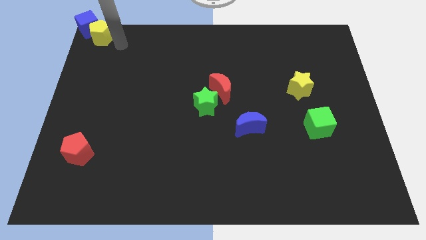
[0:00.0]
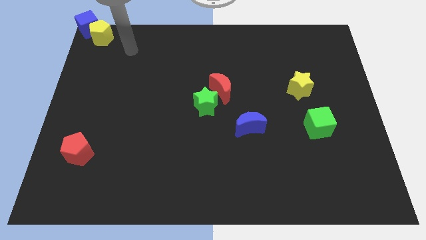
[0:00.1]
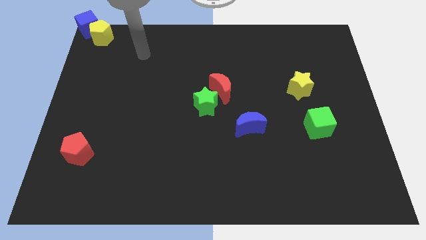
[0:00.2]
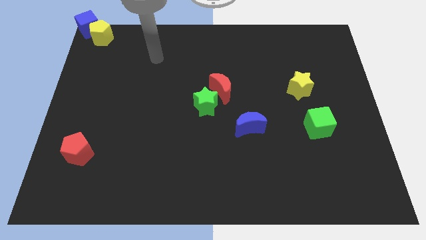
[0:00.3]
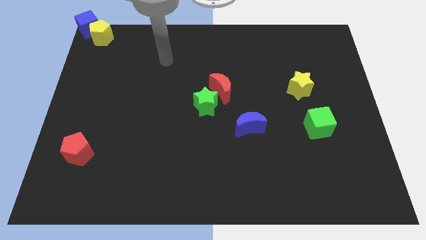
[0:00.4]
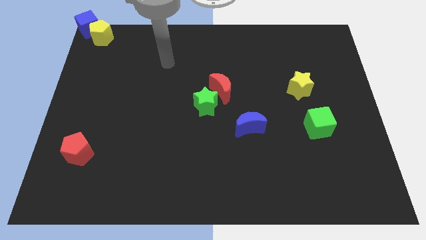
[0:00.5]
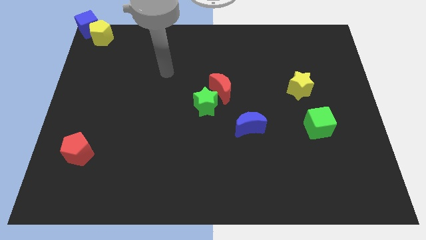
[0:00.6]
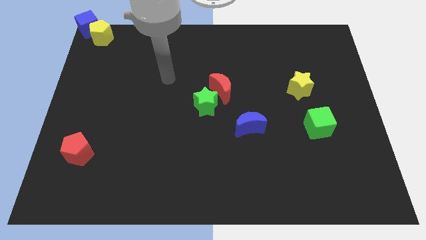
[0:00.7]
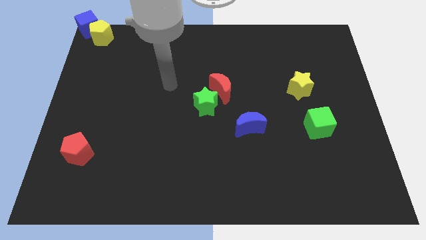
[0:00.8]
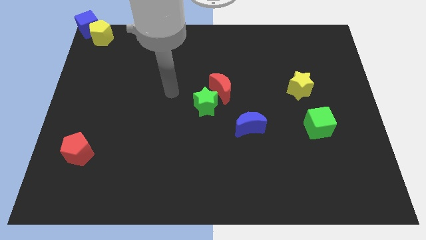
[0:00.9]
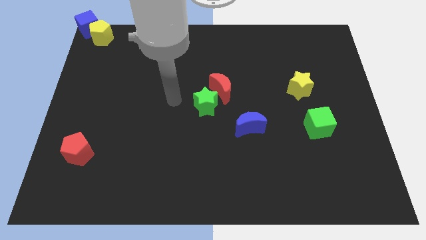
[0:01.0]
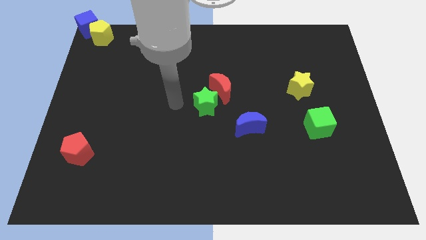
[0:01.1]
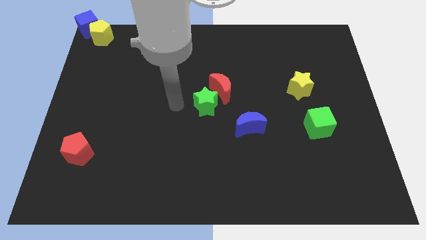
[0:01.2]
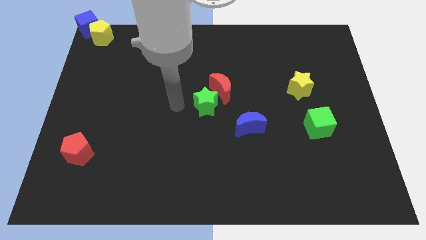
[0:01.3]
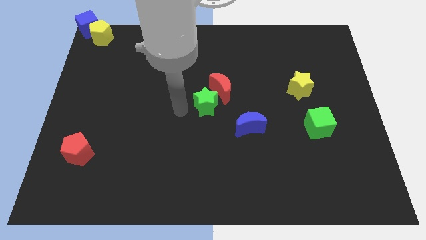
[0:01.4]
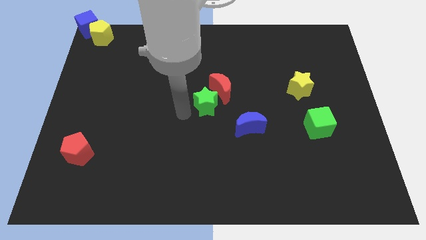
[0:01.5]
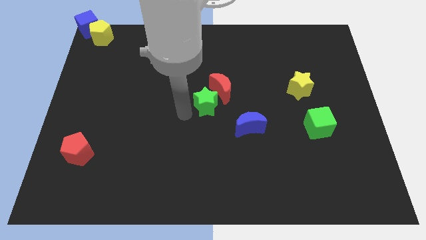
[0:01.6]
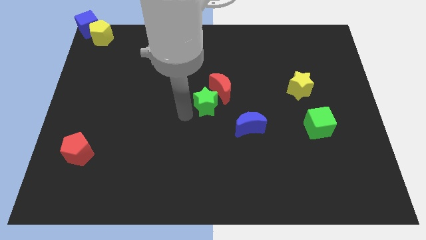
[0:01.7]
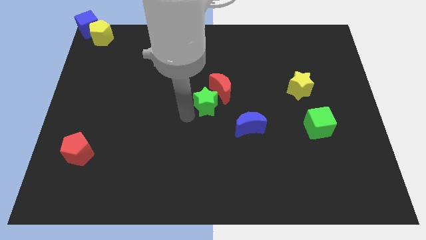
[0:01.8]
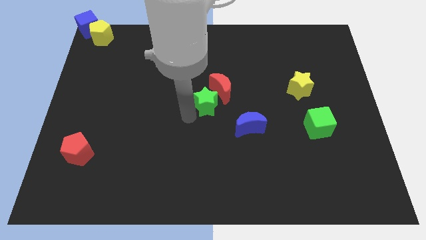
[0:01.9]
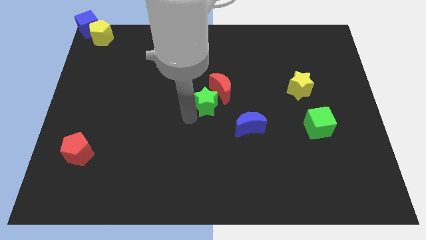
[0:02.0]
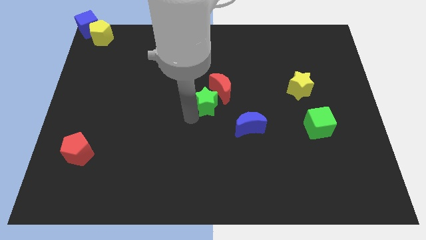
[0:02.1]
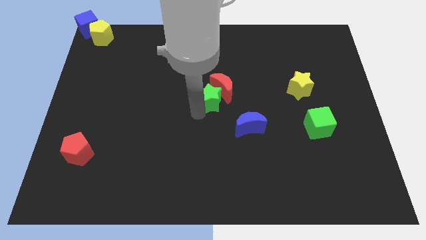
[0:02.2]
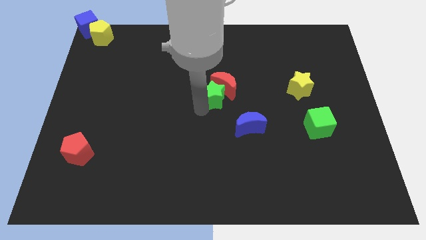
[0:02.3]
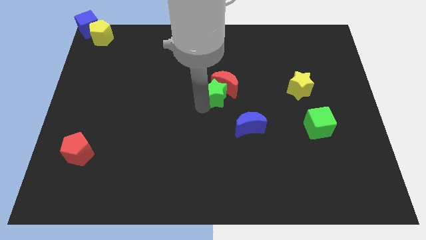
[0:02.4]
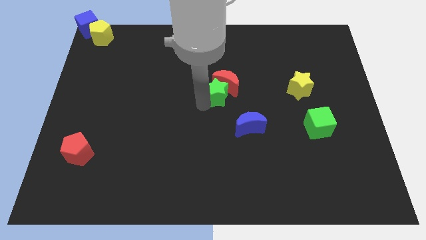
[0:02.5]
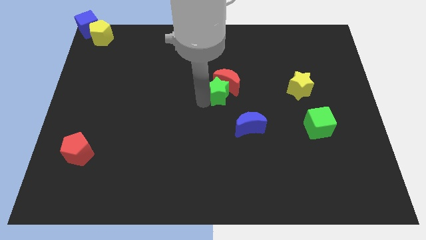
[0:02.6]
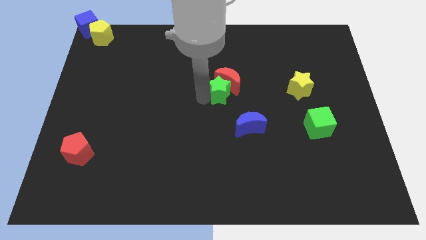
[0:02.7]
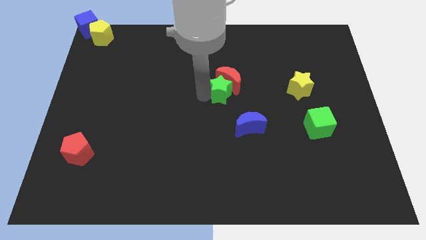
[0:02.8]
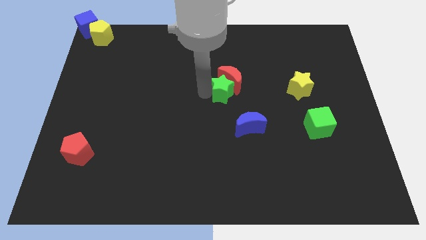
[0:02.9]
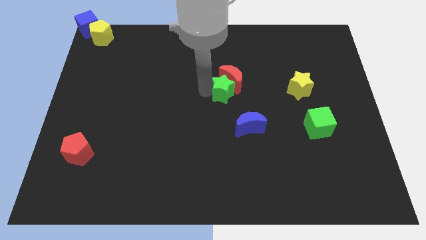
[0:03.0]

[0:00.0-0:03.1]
push the green star along with red crescent towards top right side of the board

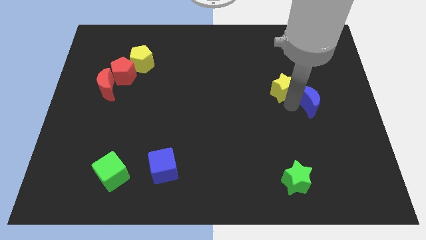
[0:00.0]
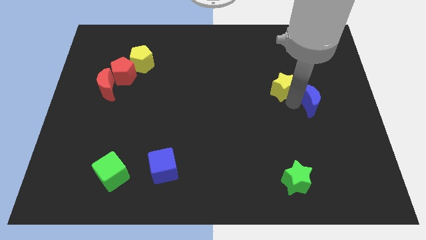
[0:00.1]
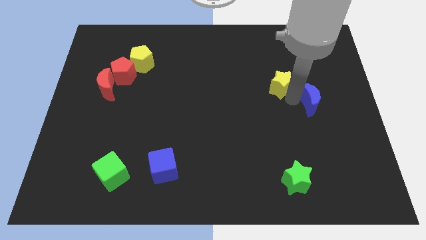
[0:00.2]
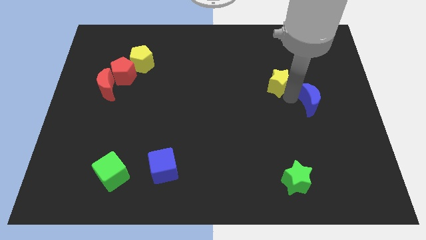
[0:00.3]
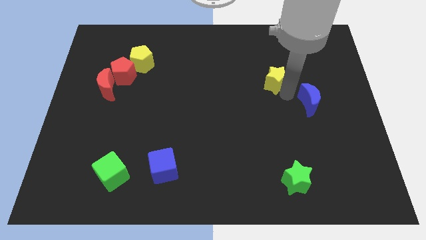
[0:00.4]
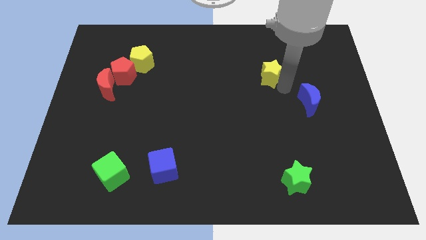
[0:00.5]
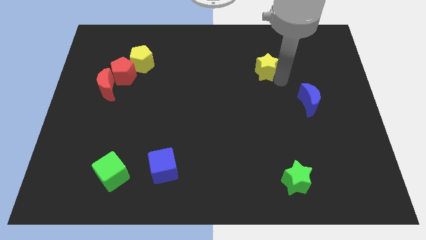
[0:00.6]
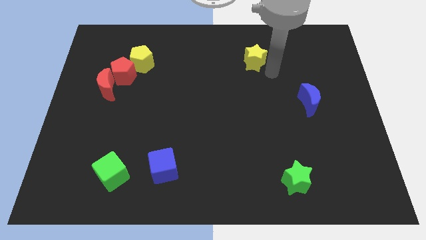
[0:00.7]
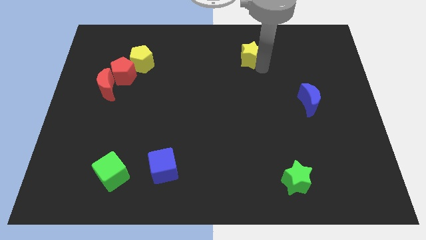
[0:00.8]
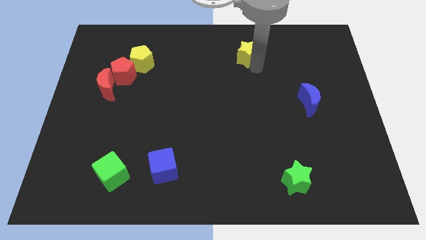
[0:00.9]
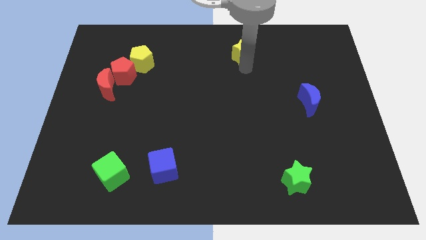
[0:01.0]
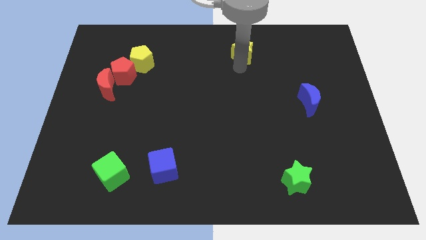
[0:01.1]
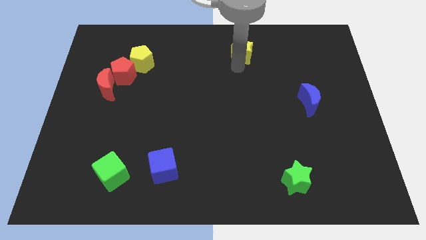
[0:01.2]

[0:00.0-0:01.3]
push the yellow star to the top of the board

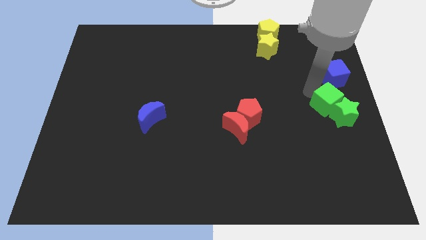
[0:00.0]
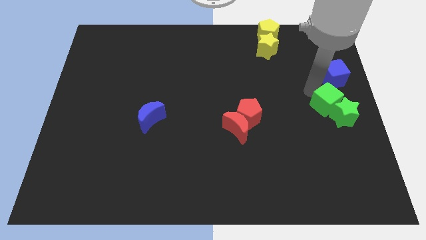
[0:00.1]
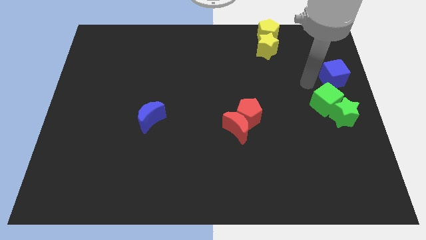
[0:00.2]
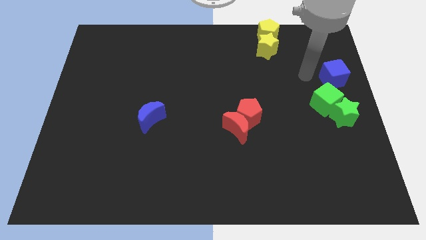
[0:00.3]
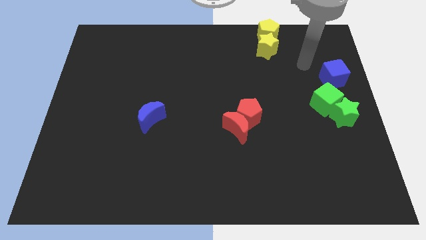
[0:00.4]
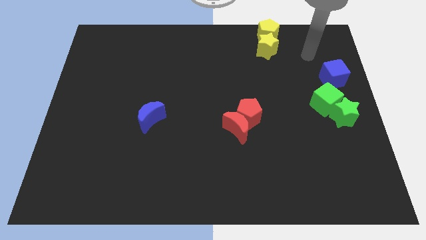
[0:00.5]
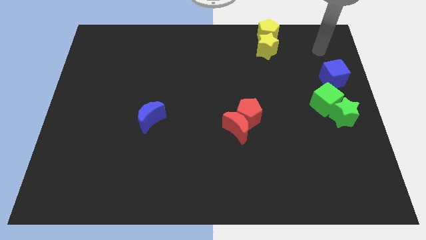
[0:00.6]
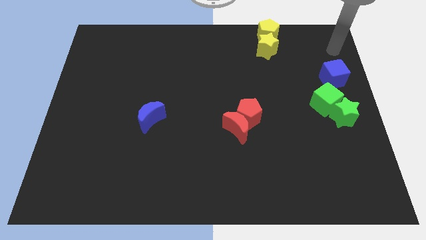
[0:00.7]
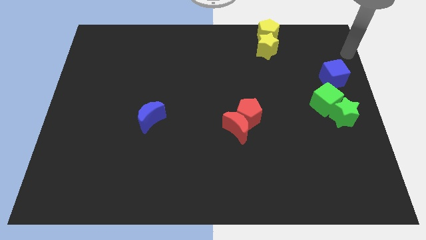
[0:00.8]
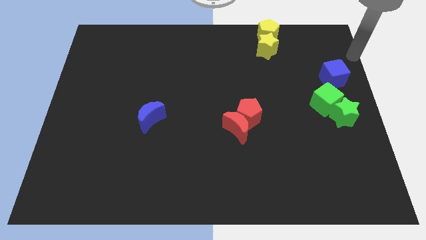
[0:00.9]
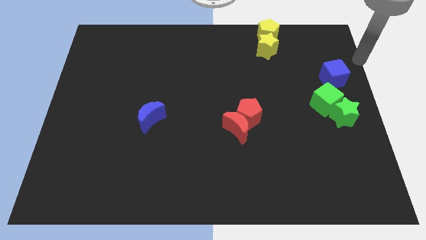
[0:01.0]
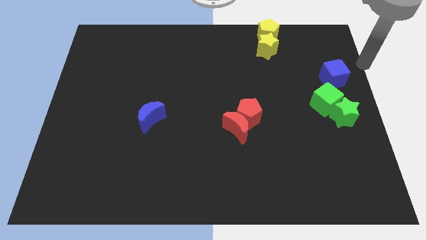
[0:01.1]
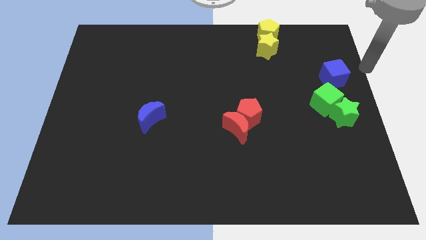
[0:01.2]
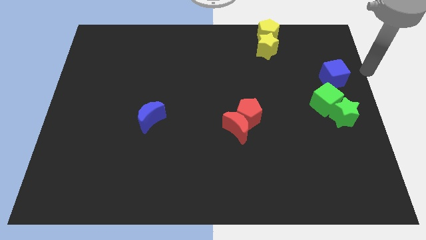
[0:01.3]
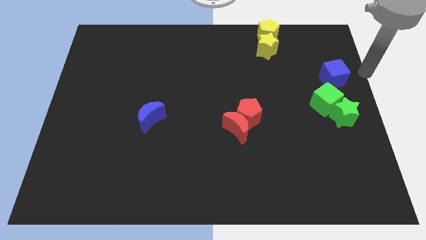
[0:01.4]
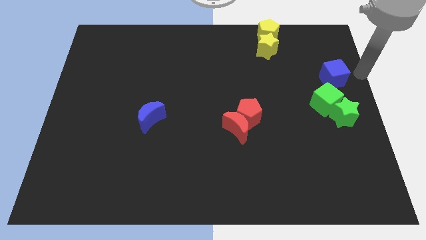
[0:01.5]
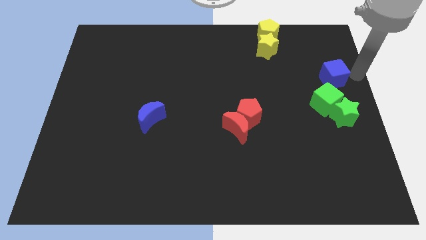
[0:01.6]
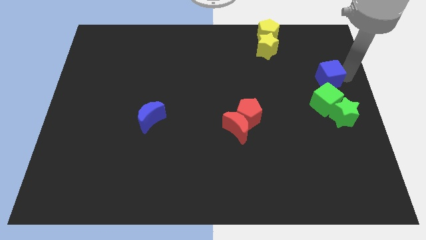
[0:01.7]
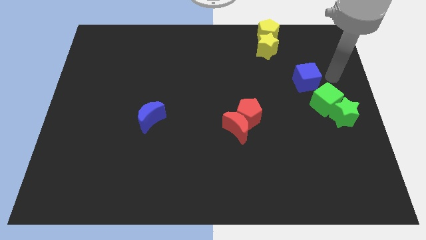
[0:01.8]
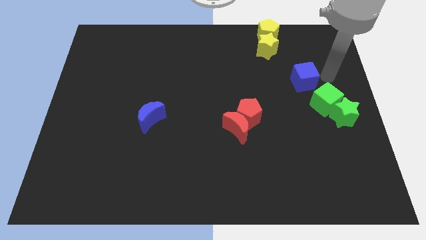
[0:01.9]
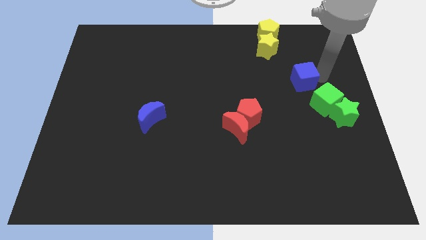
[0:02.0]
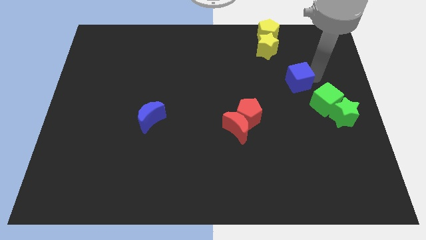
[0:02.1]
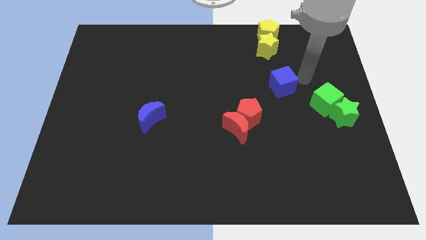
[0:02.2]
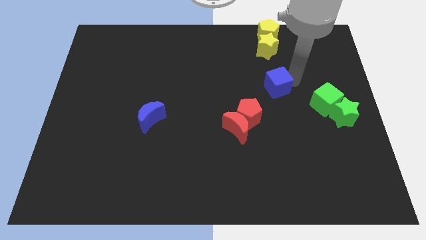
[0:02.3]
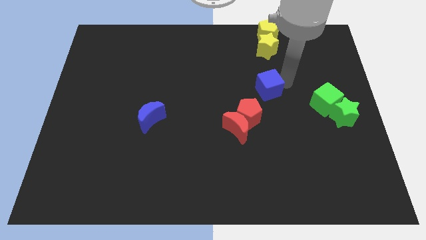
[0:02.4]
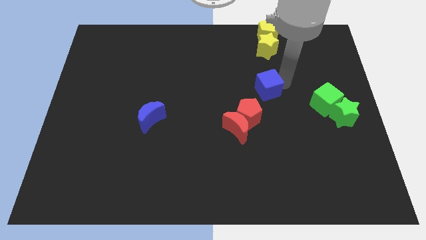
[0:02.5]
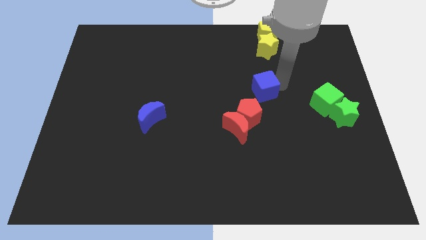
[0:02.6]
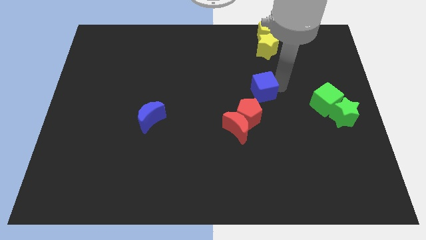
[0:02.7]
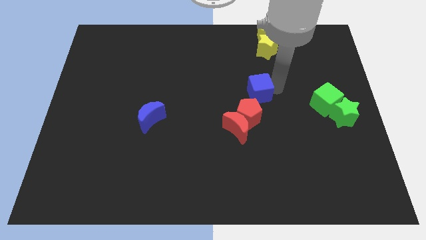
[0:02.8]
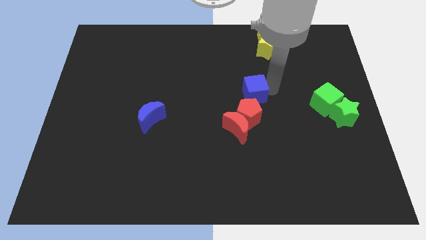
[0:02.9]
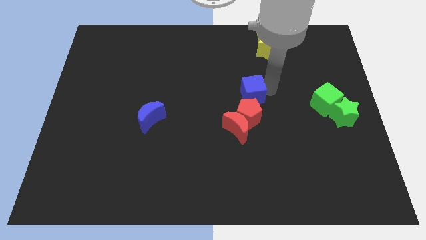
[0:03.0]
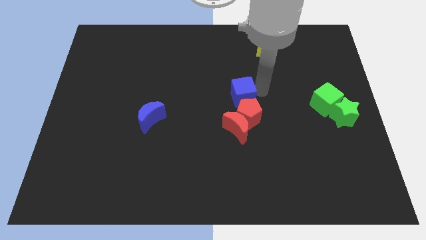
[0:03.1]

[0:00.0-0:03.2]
push blue cube above red pentagon

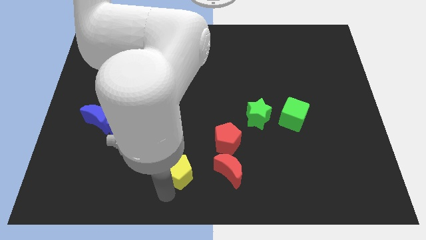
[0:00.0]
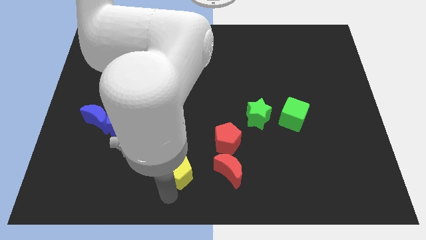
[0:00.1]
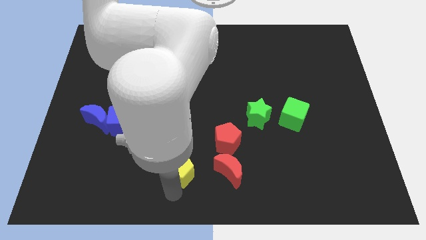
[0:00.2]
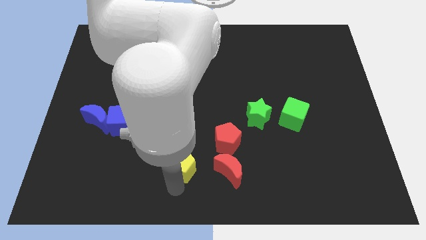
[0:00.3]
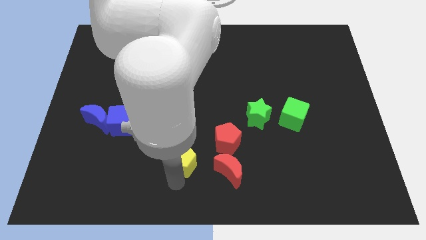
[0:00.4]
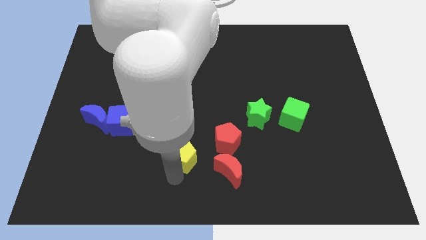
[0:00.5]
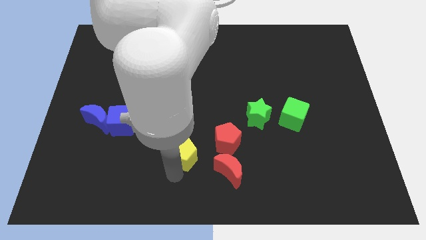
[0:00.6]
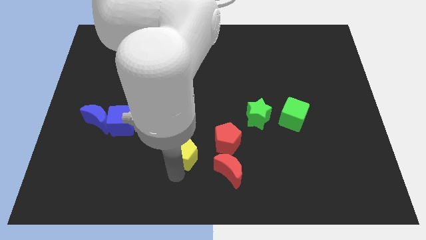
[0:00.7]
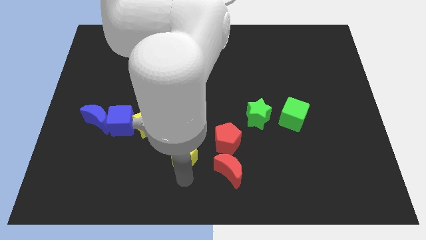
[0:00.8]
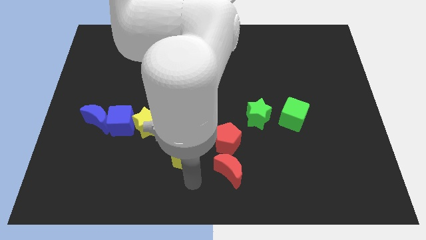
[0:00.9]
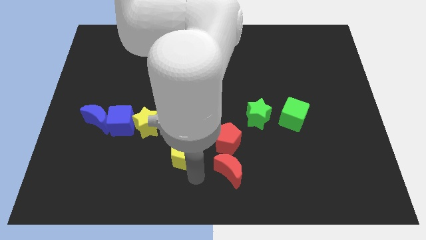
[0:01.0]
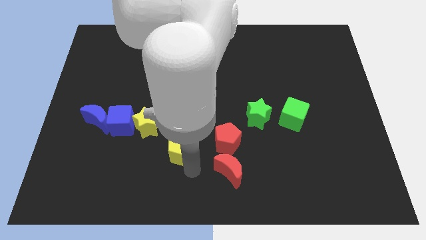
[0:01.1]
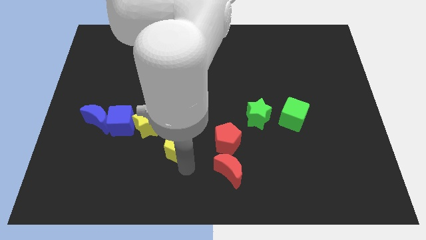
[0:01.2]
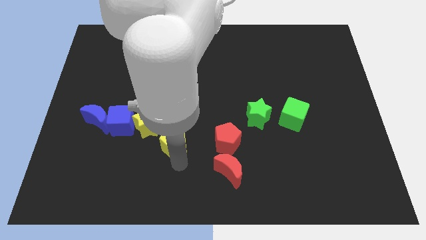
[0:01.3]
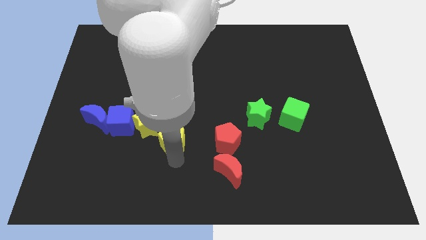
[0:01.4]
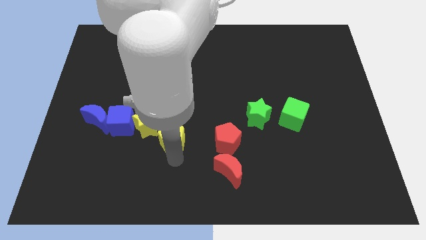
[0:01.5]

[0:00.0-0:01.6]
push the yellow pentagon near to the yellow star
